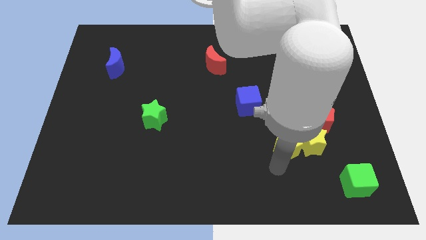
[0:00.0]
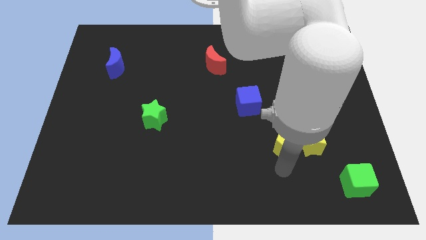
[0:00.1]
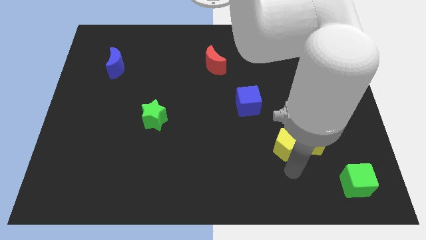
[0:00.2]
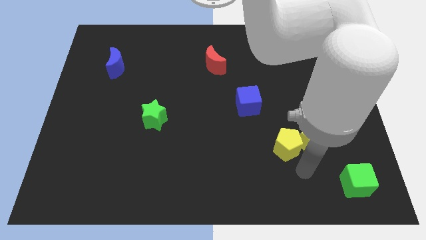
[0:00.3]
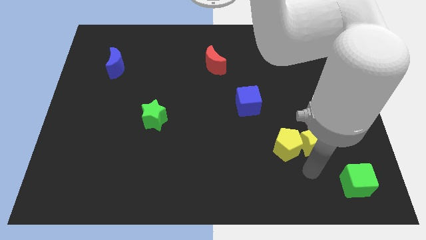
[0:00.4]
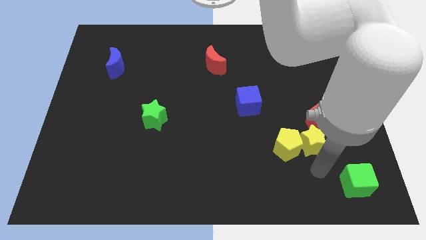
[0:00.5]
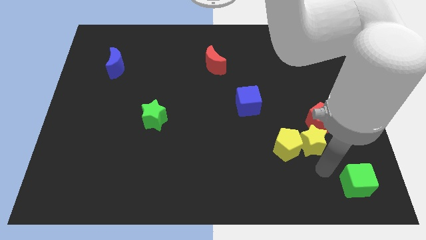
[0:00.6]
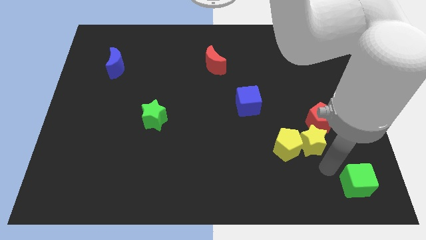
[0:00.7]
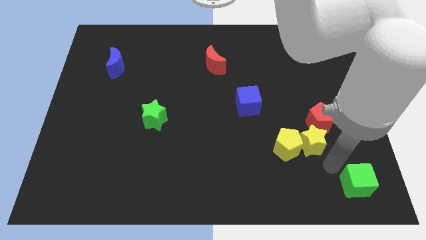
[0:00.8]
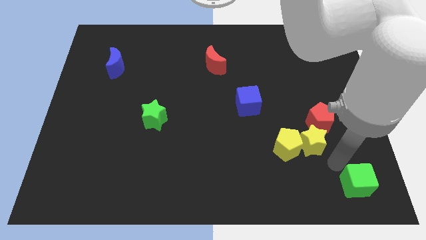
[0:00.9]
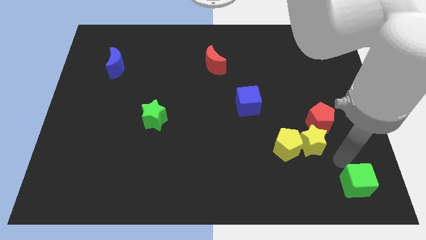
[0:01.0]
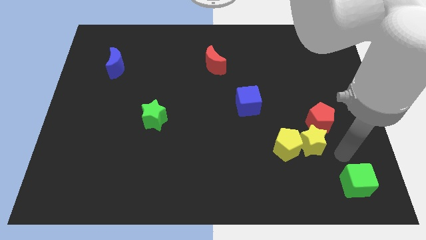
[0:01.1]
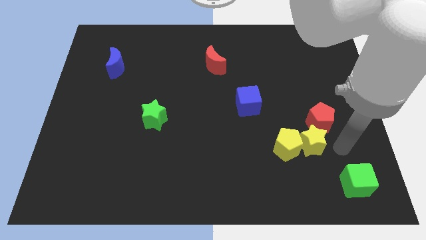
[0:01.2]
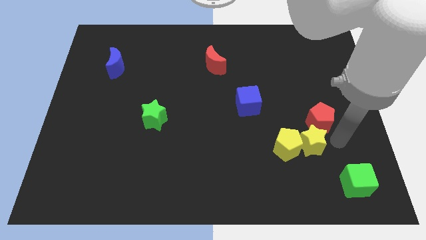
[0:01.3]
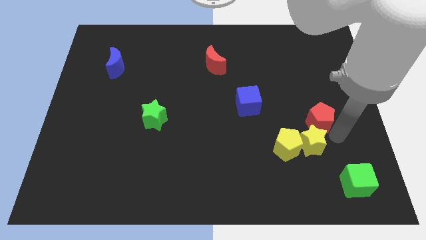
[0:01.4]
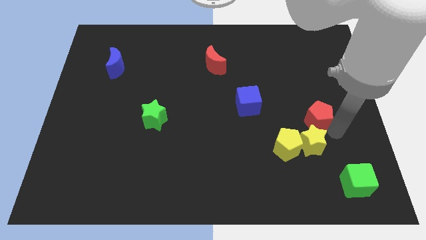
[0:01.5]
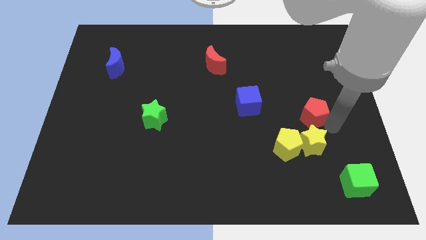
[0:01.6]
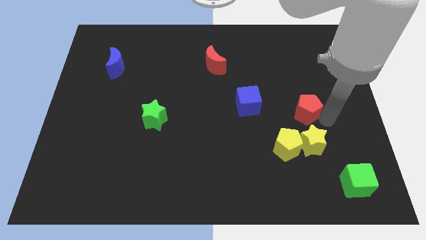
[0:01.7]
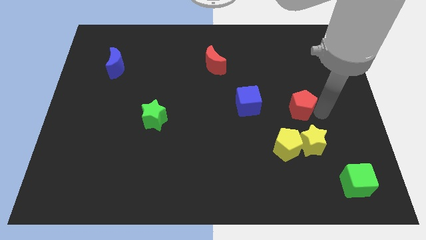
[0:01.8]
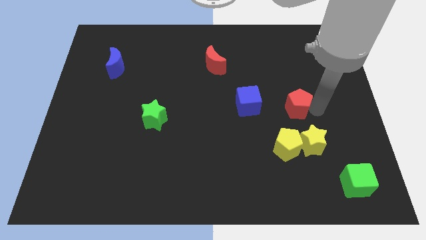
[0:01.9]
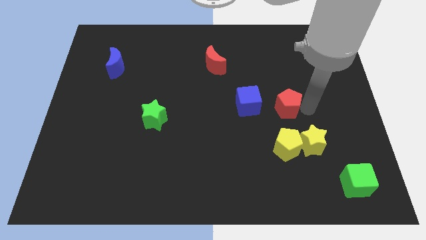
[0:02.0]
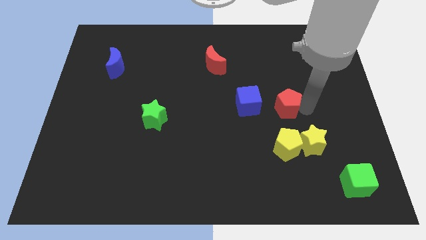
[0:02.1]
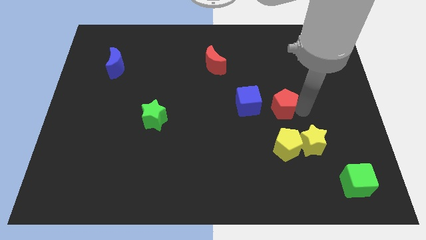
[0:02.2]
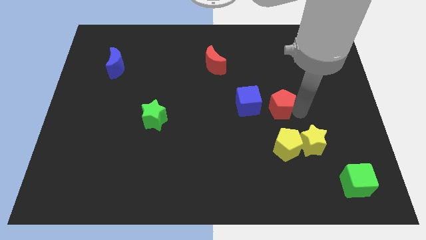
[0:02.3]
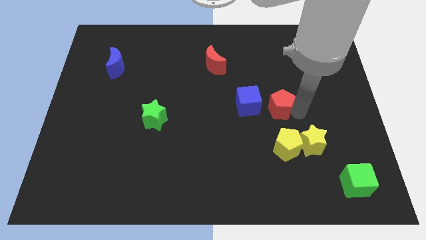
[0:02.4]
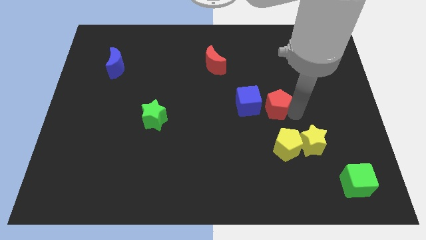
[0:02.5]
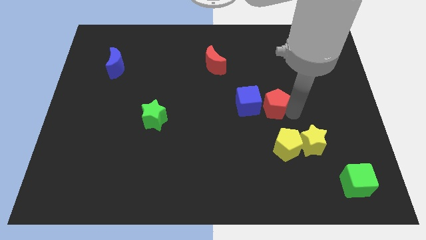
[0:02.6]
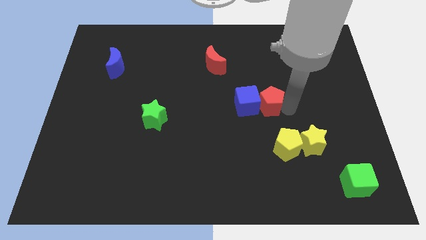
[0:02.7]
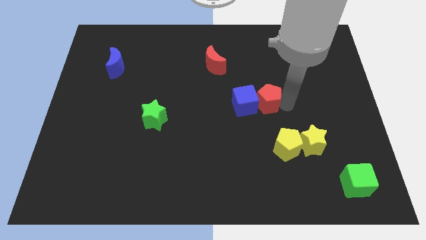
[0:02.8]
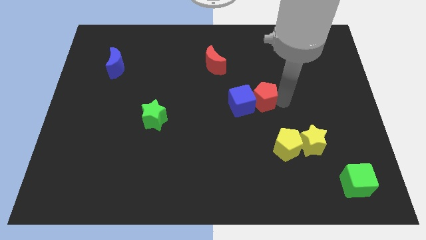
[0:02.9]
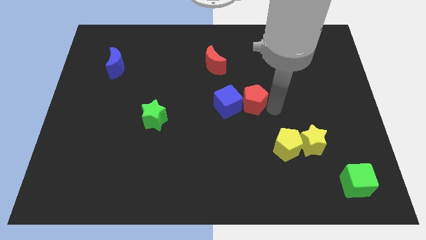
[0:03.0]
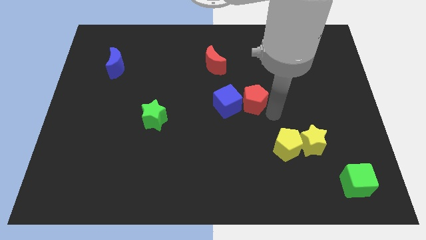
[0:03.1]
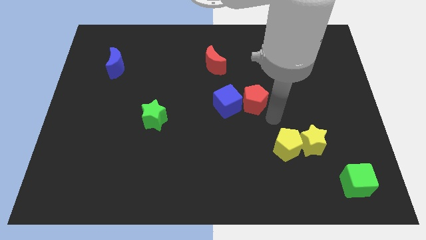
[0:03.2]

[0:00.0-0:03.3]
move the red pentagon into the blue cube

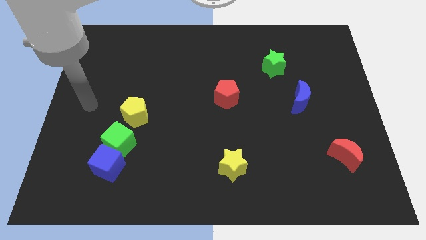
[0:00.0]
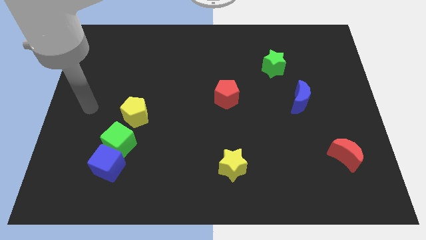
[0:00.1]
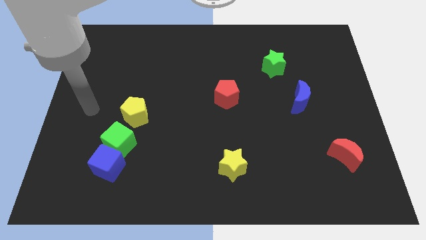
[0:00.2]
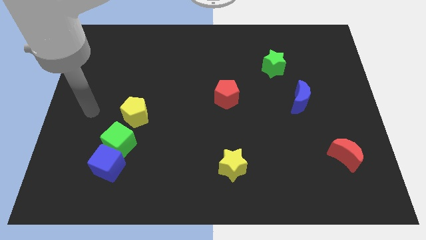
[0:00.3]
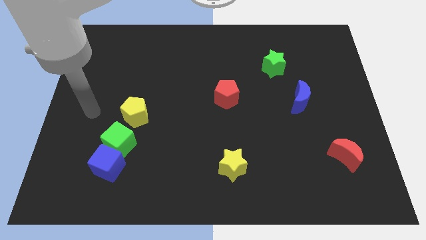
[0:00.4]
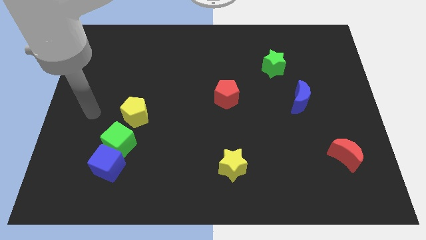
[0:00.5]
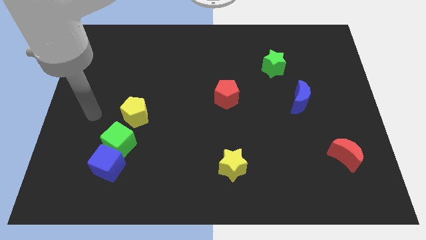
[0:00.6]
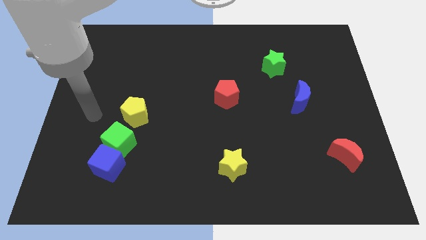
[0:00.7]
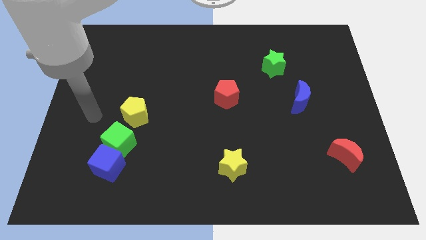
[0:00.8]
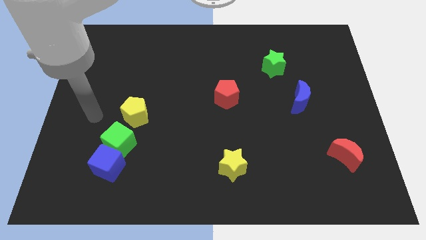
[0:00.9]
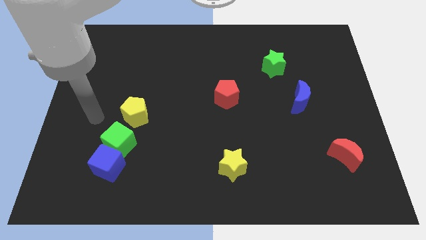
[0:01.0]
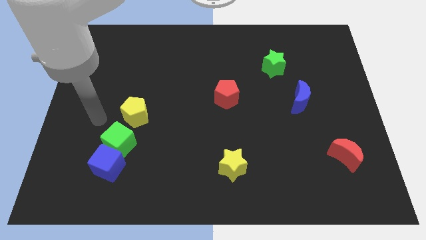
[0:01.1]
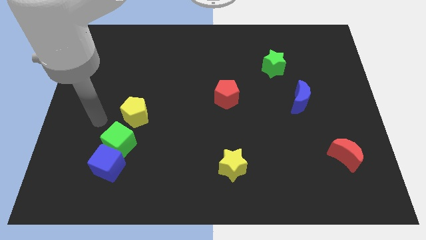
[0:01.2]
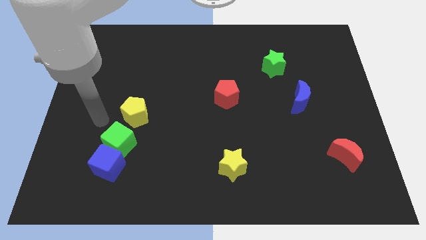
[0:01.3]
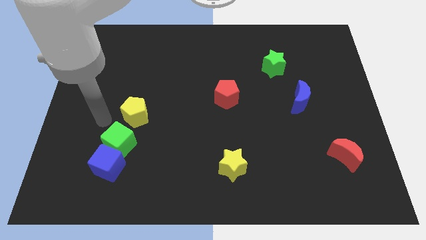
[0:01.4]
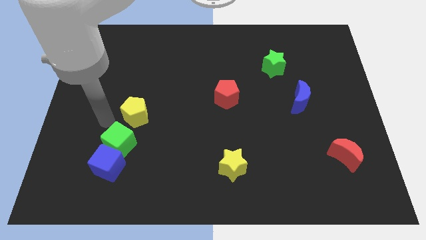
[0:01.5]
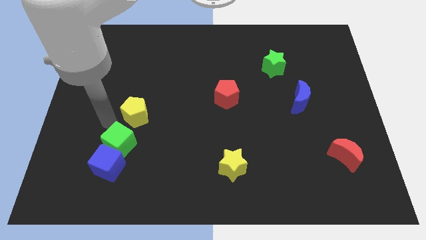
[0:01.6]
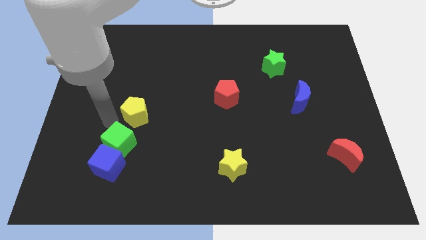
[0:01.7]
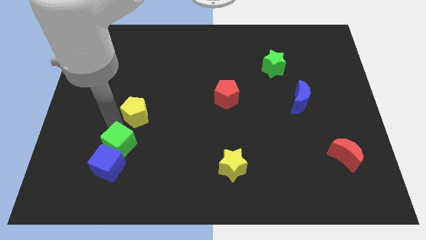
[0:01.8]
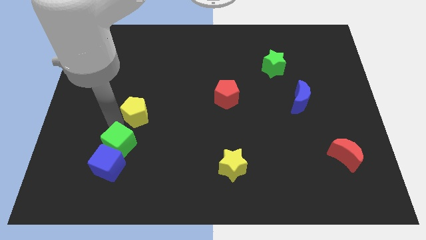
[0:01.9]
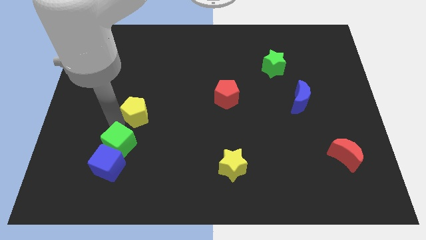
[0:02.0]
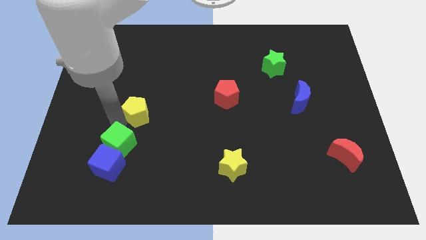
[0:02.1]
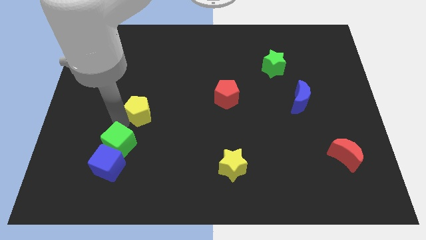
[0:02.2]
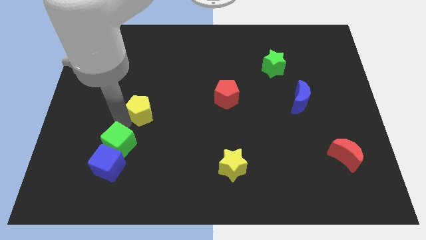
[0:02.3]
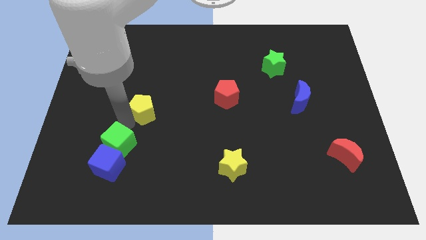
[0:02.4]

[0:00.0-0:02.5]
slightly push yellow pentagon towards its right

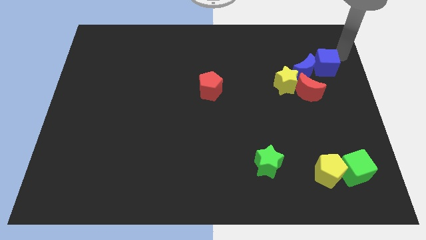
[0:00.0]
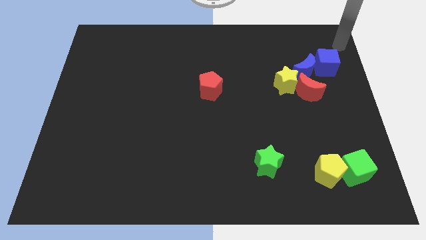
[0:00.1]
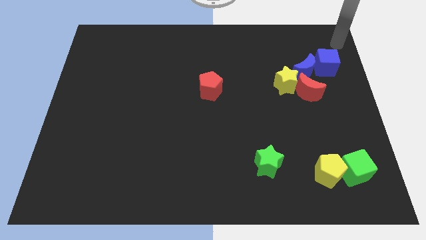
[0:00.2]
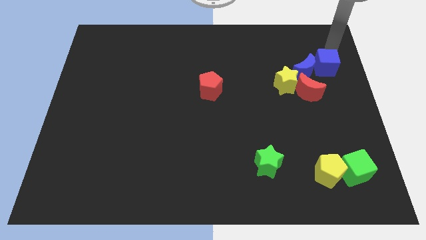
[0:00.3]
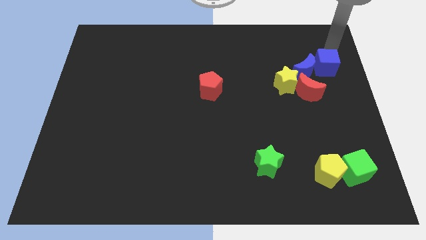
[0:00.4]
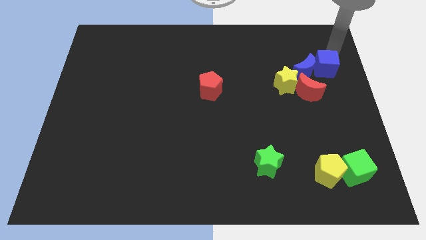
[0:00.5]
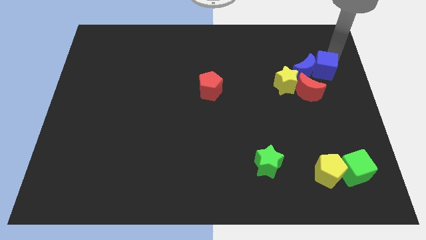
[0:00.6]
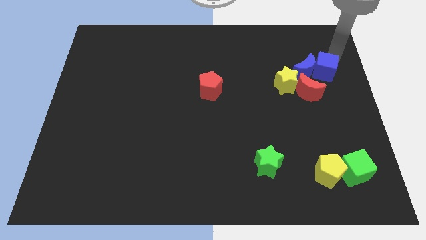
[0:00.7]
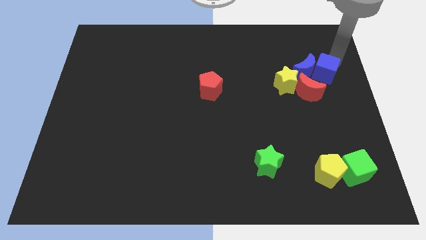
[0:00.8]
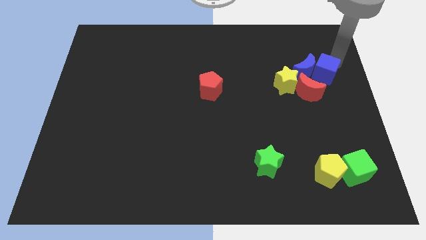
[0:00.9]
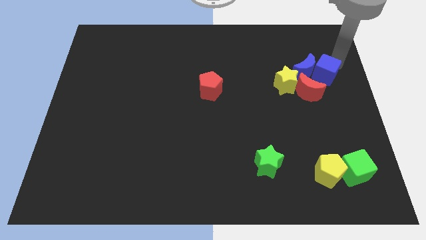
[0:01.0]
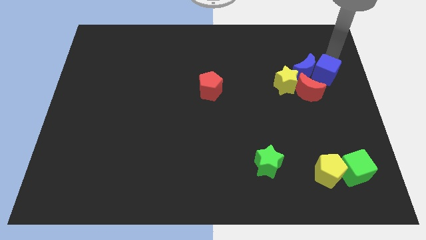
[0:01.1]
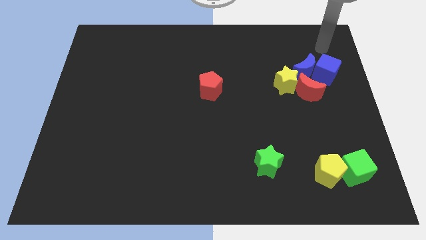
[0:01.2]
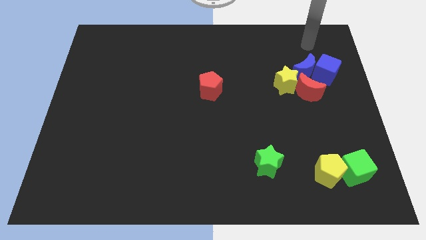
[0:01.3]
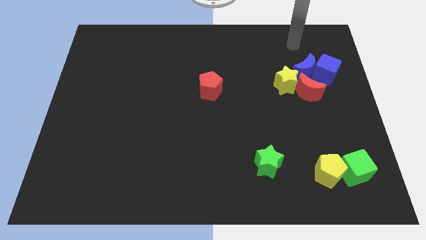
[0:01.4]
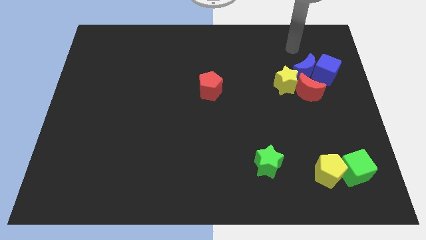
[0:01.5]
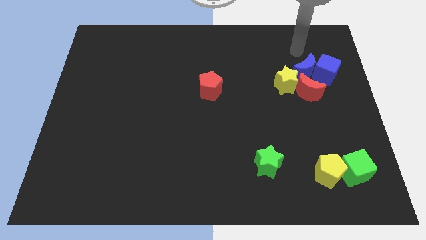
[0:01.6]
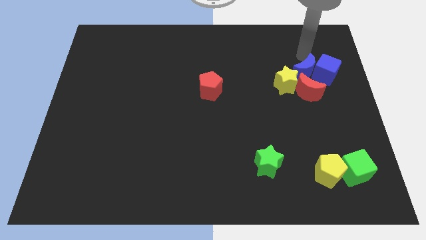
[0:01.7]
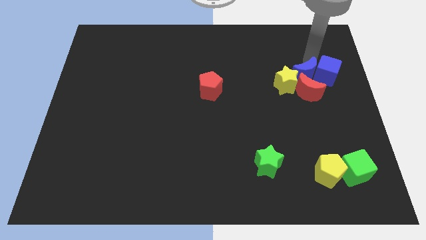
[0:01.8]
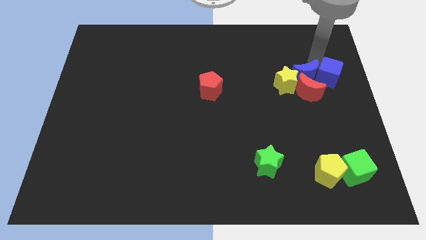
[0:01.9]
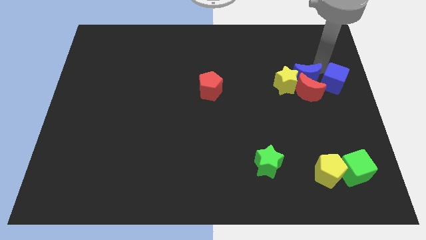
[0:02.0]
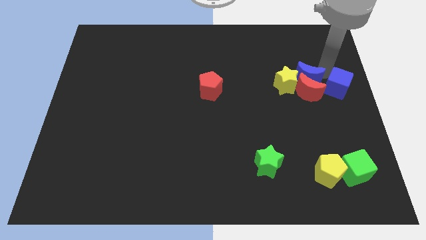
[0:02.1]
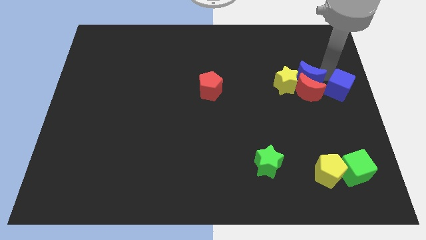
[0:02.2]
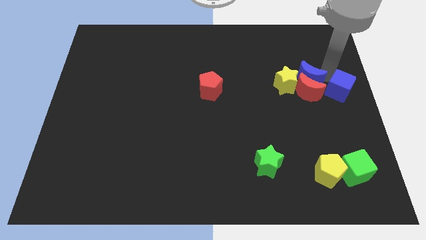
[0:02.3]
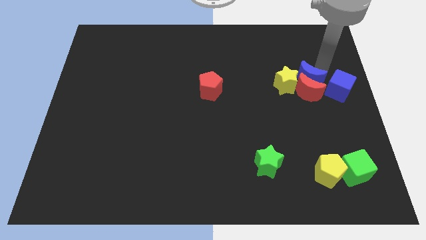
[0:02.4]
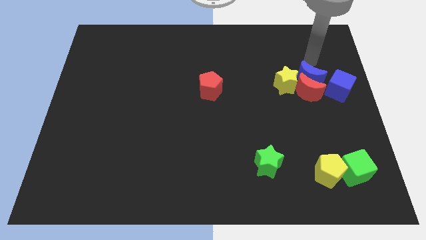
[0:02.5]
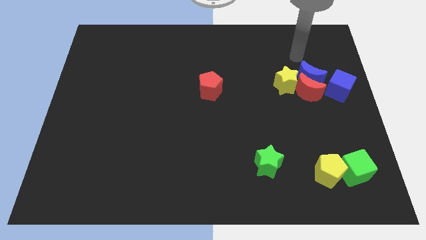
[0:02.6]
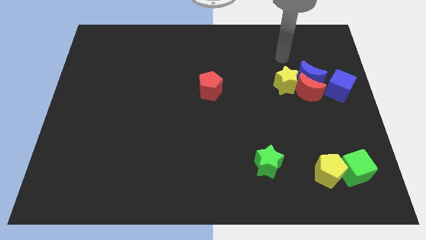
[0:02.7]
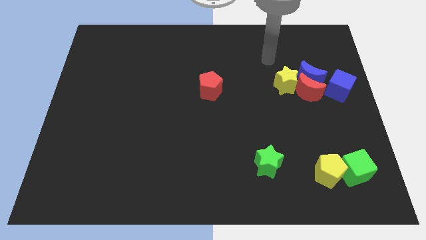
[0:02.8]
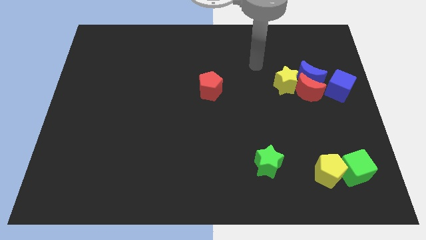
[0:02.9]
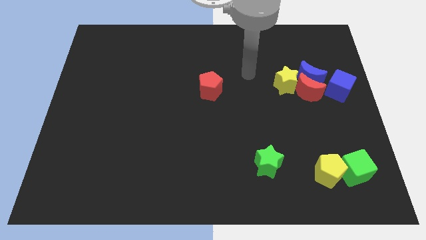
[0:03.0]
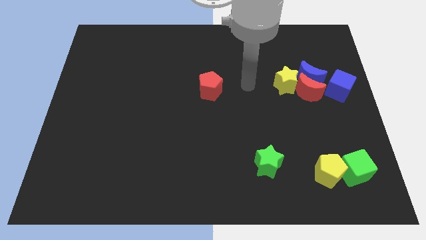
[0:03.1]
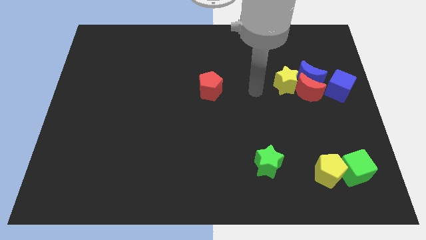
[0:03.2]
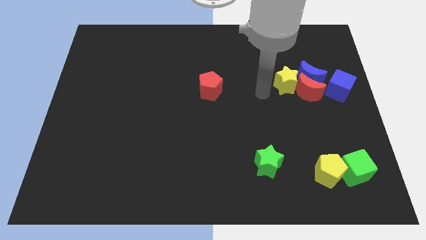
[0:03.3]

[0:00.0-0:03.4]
separate the blue cube from blue crescent
